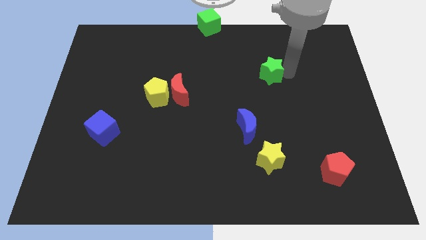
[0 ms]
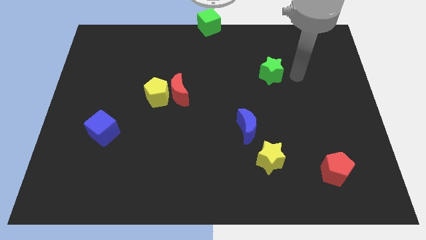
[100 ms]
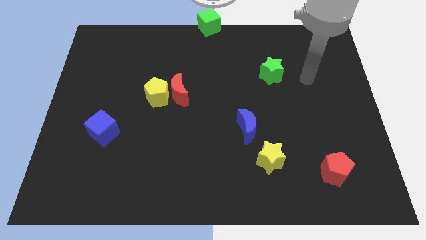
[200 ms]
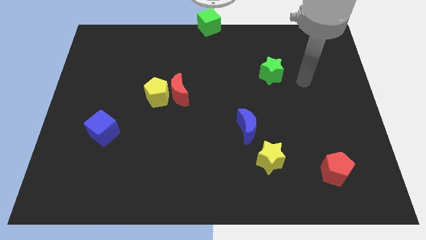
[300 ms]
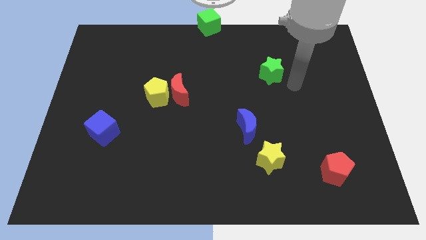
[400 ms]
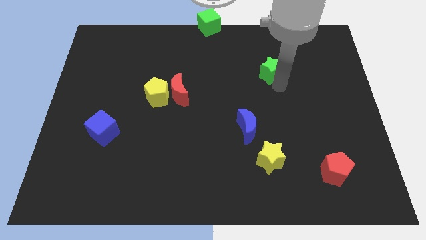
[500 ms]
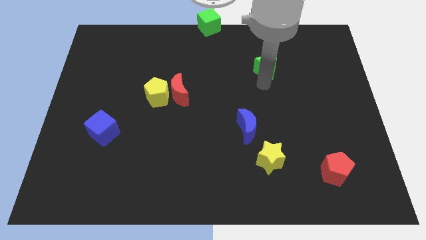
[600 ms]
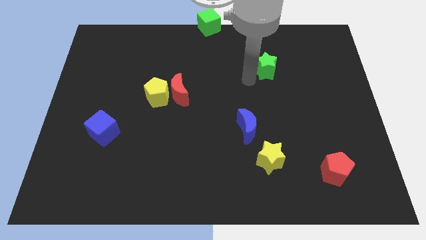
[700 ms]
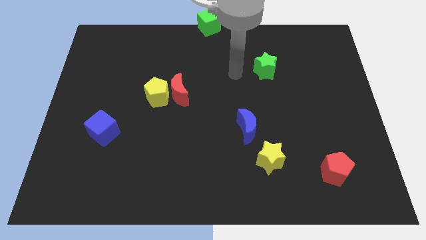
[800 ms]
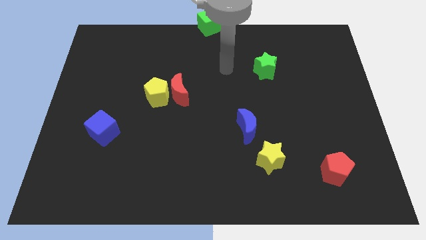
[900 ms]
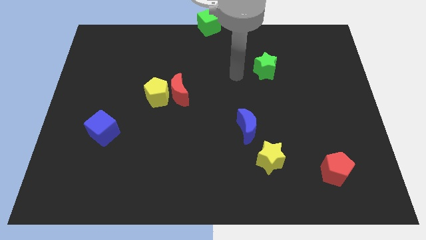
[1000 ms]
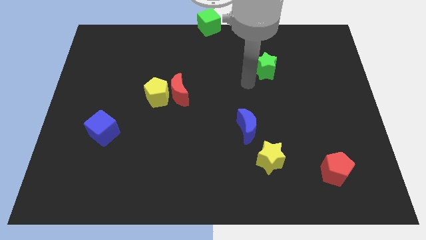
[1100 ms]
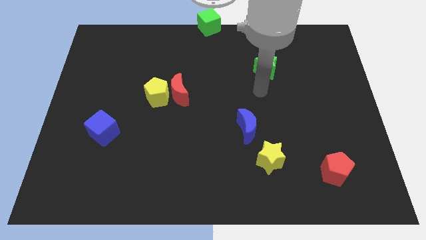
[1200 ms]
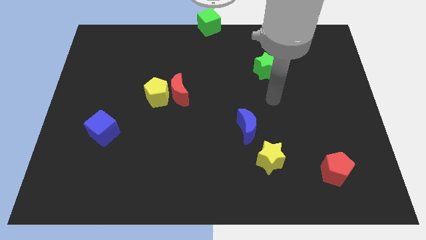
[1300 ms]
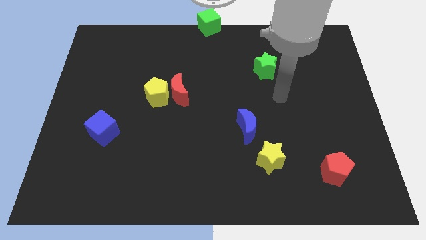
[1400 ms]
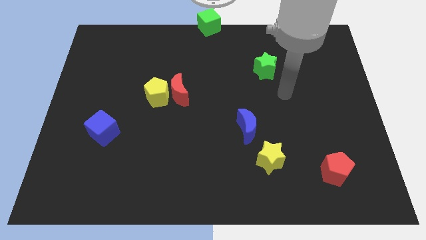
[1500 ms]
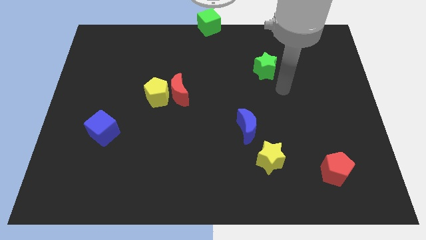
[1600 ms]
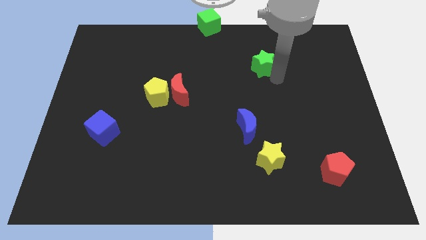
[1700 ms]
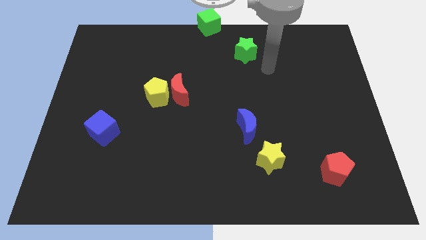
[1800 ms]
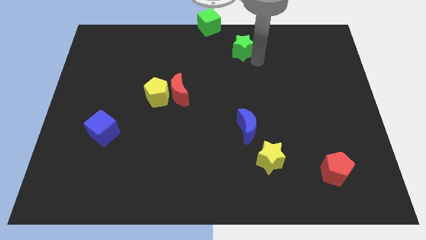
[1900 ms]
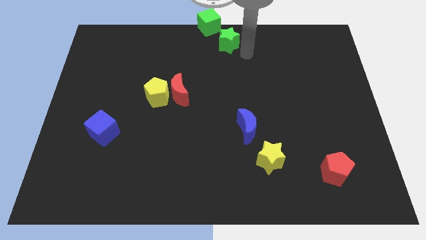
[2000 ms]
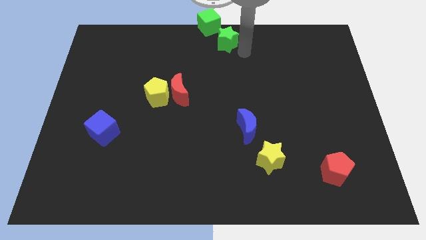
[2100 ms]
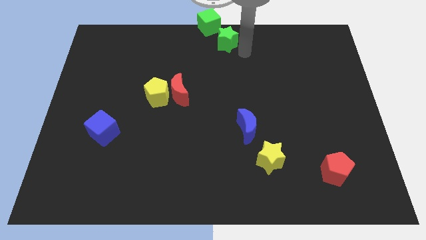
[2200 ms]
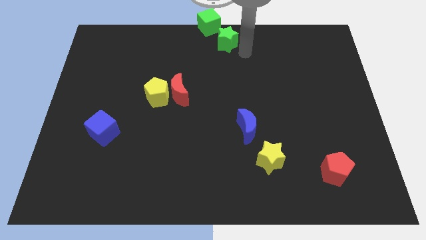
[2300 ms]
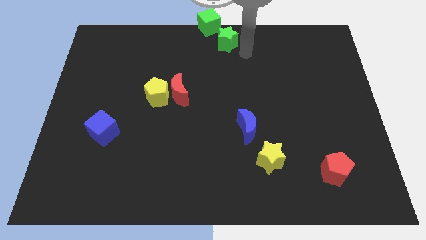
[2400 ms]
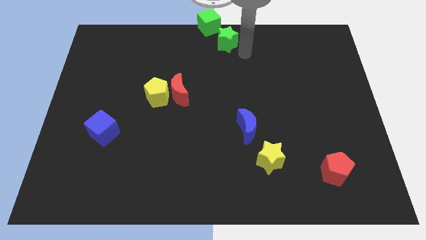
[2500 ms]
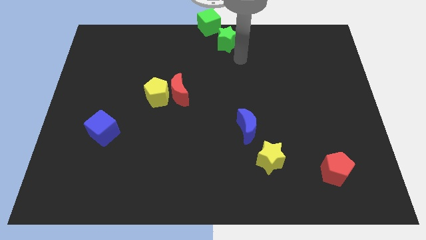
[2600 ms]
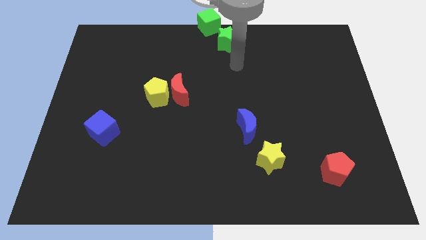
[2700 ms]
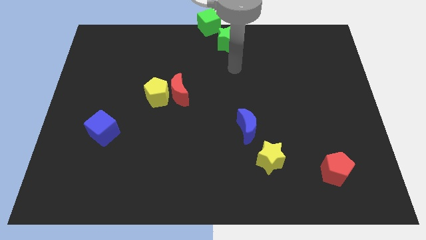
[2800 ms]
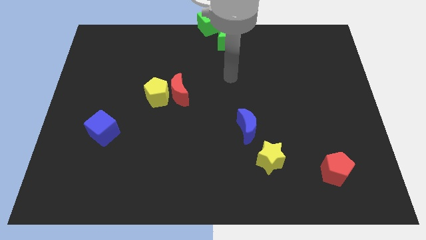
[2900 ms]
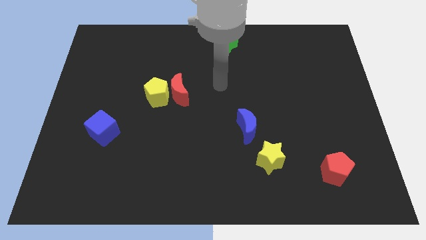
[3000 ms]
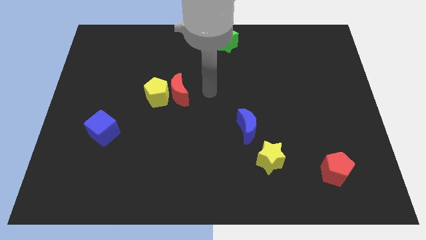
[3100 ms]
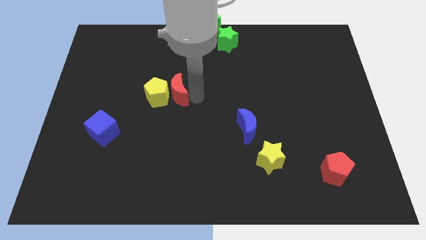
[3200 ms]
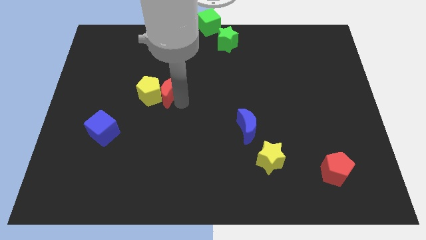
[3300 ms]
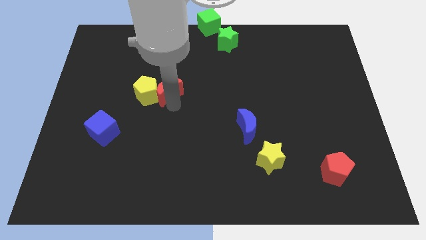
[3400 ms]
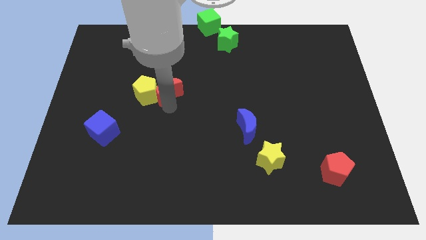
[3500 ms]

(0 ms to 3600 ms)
move the green star towards the green cube

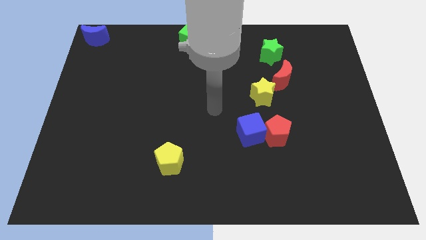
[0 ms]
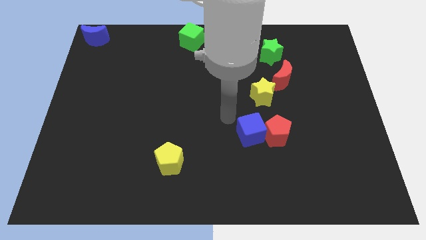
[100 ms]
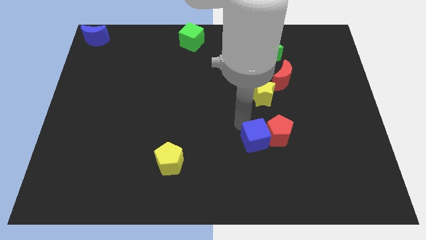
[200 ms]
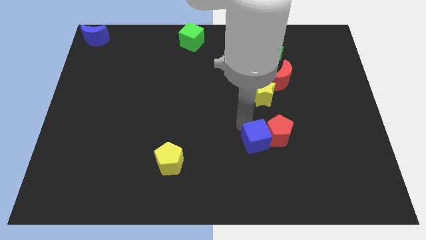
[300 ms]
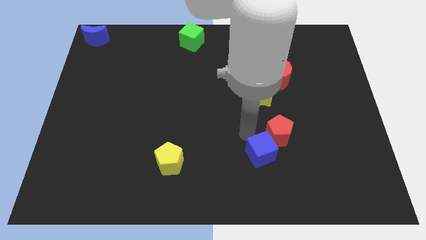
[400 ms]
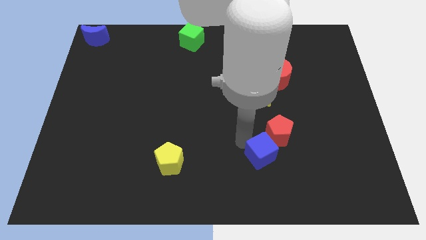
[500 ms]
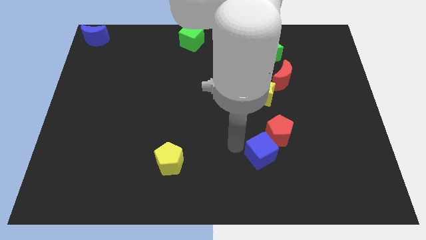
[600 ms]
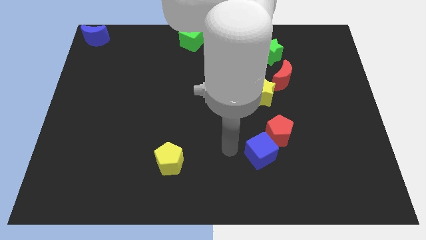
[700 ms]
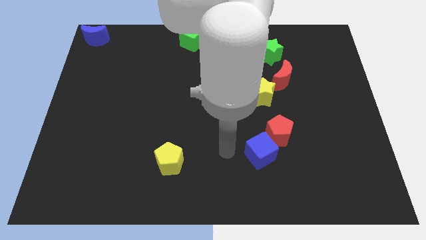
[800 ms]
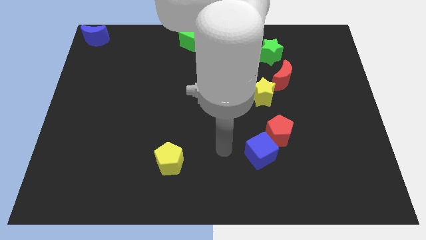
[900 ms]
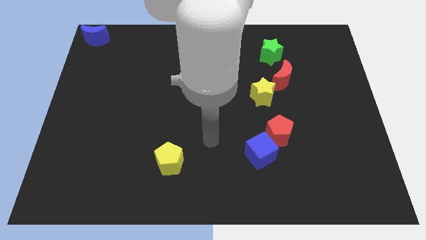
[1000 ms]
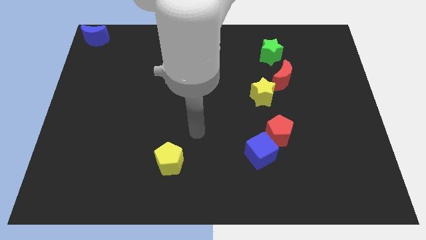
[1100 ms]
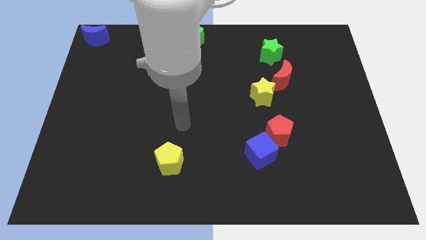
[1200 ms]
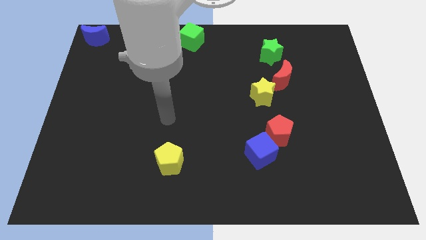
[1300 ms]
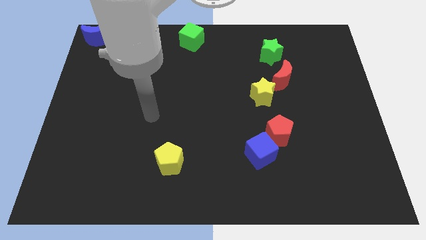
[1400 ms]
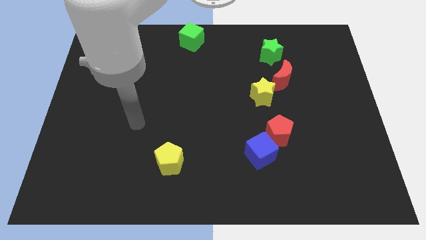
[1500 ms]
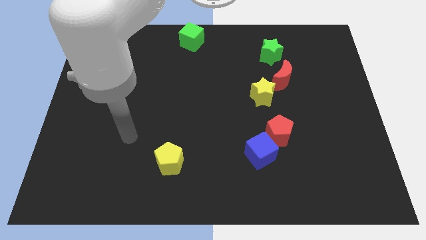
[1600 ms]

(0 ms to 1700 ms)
move blue cube to the left bottom of the red pentagon

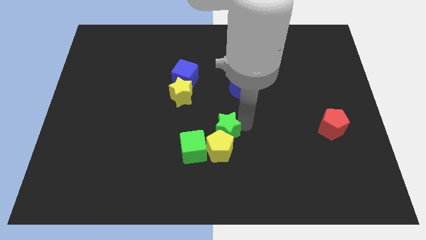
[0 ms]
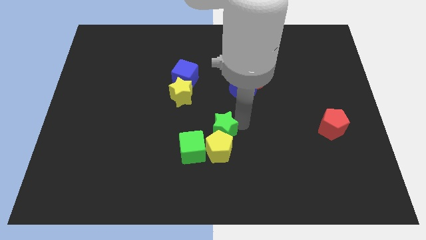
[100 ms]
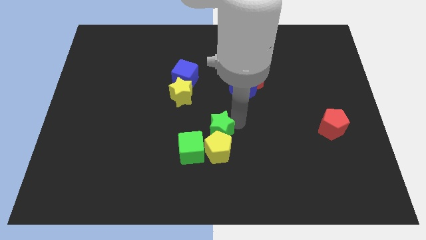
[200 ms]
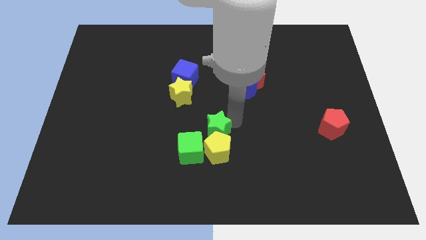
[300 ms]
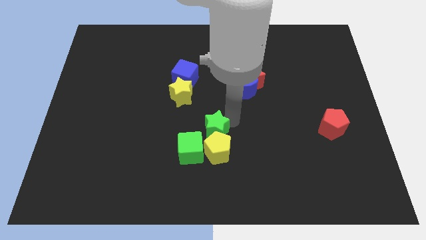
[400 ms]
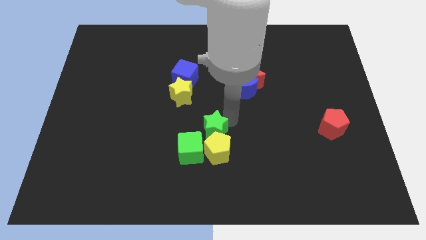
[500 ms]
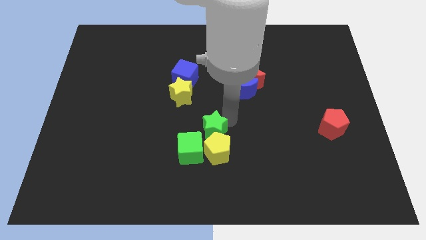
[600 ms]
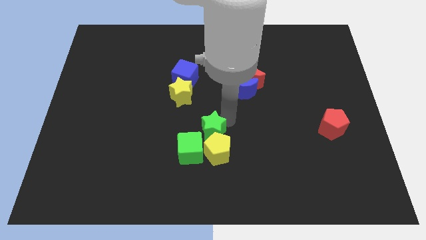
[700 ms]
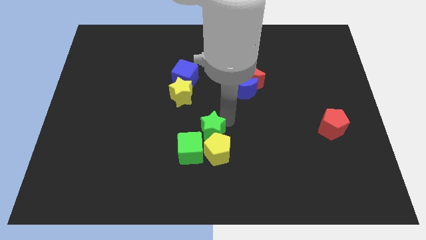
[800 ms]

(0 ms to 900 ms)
place the green star to the top of the yellow pentagon

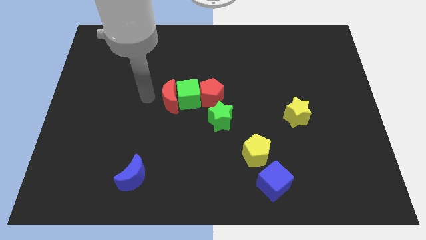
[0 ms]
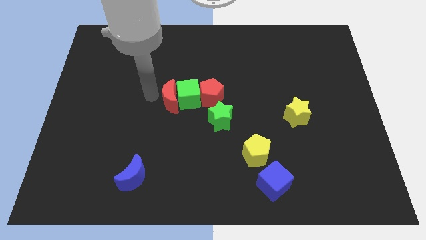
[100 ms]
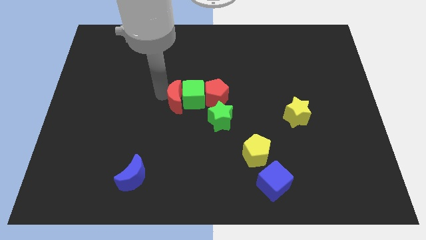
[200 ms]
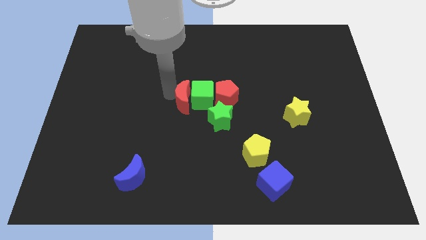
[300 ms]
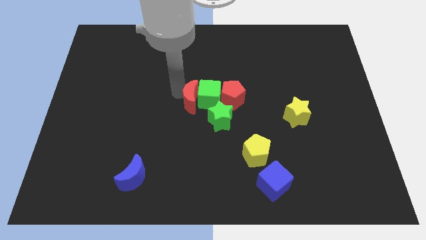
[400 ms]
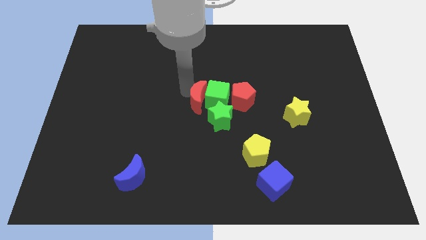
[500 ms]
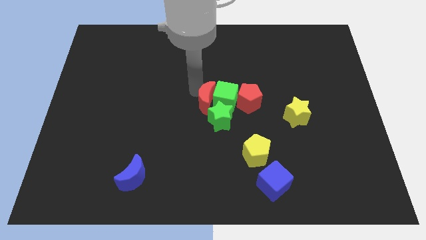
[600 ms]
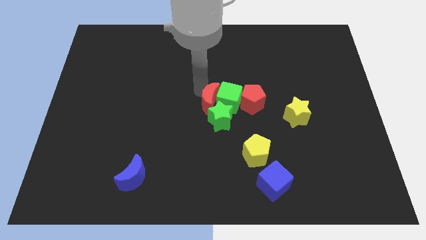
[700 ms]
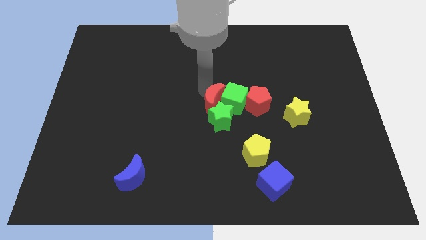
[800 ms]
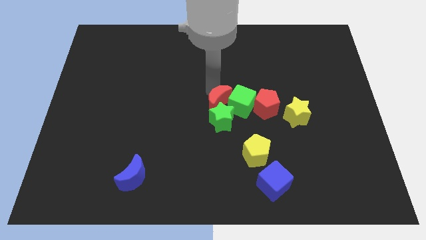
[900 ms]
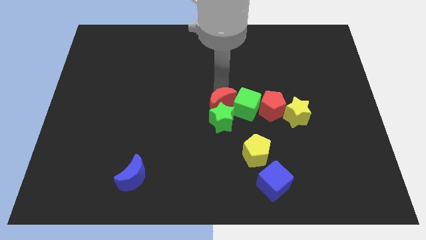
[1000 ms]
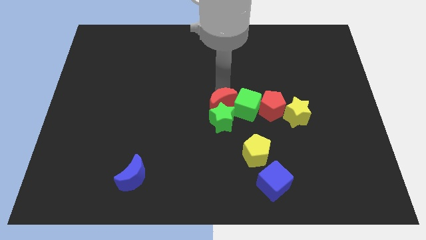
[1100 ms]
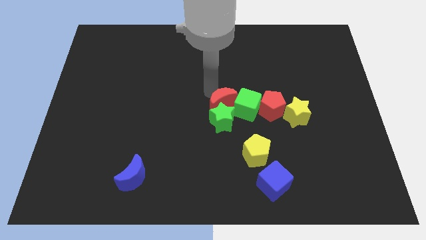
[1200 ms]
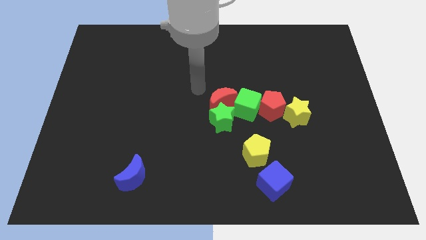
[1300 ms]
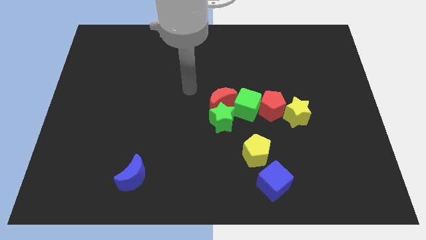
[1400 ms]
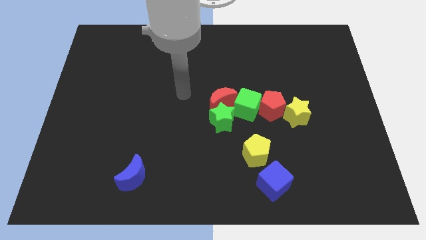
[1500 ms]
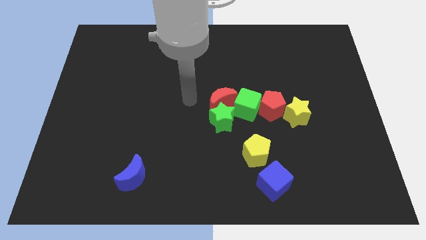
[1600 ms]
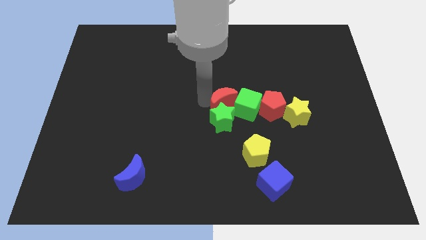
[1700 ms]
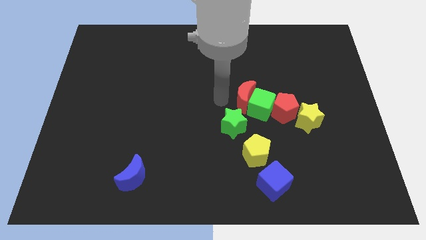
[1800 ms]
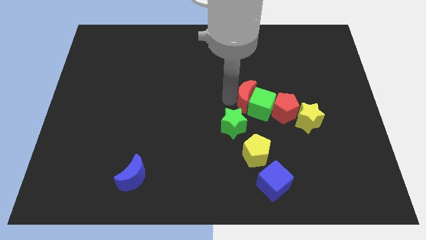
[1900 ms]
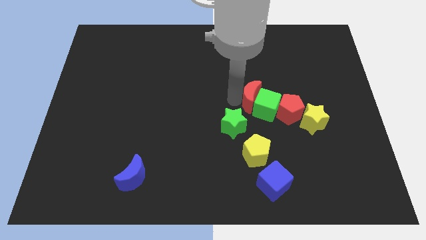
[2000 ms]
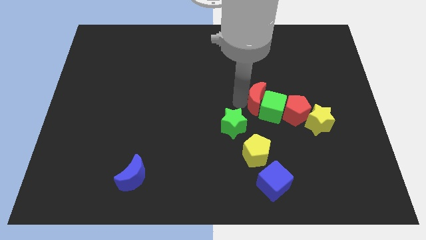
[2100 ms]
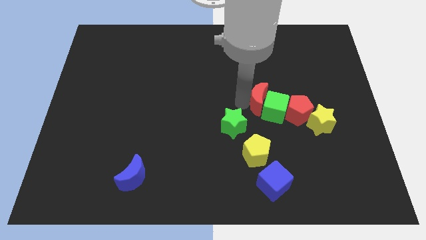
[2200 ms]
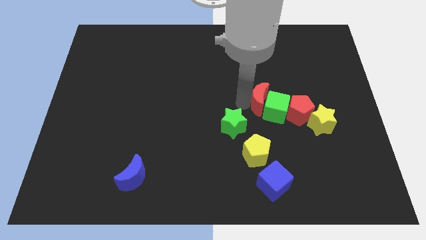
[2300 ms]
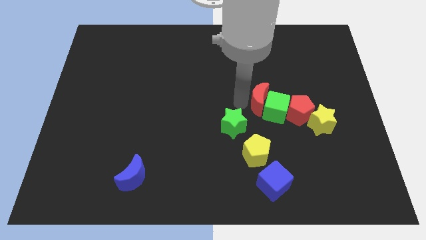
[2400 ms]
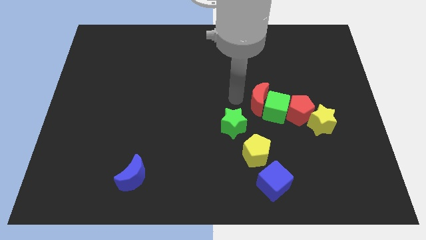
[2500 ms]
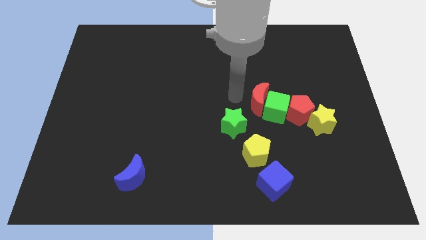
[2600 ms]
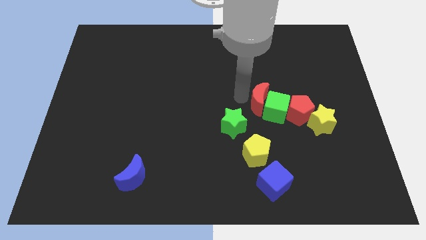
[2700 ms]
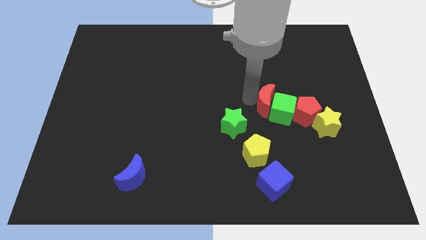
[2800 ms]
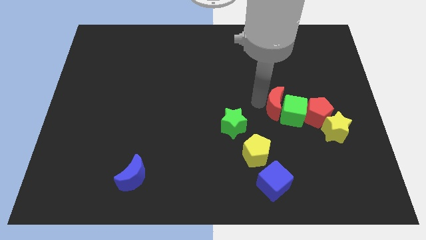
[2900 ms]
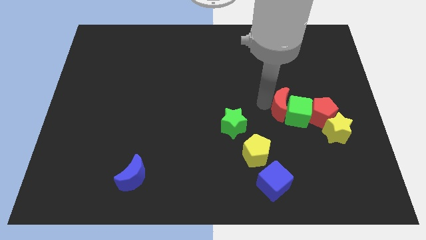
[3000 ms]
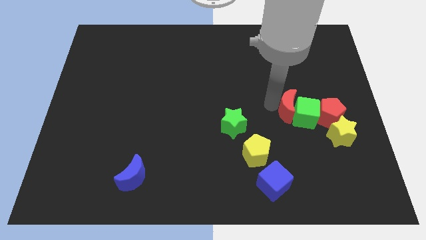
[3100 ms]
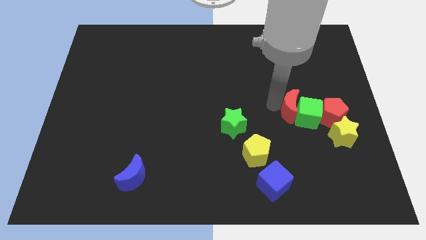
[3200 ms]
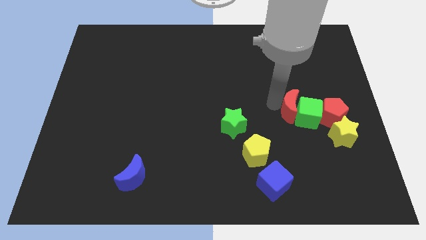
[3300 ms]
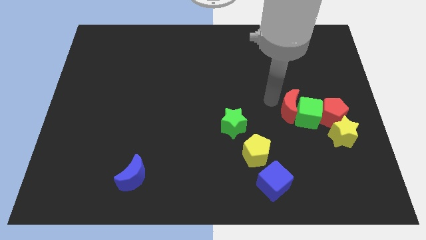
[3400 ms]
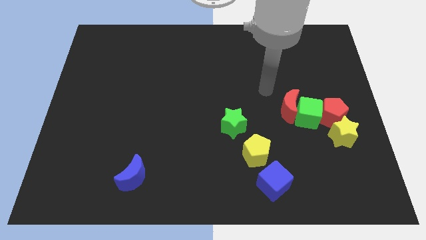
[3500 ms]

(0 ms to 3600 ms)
move the group of the blocks to the centre right of the board
